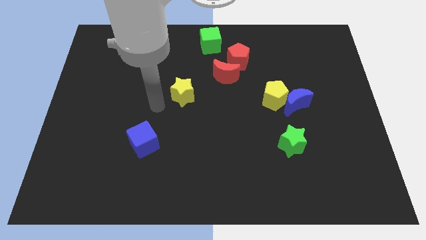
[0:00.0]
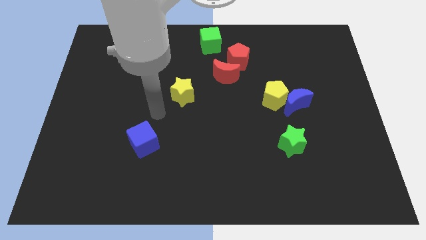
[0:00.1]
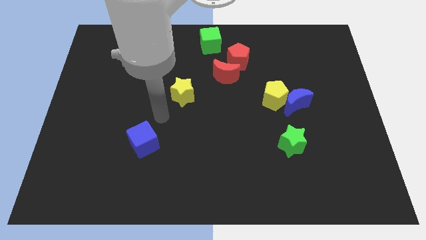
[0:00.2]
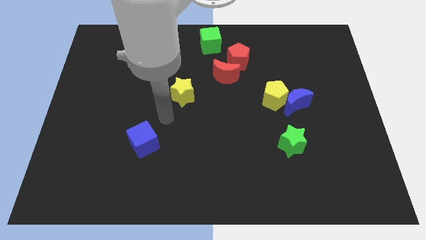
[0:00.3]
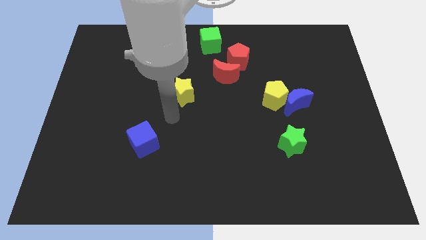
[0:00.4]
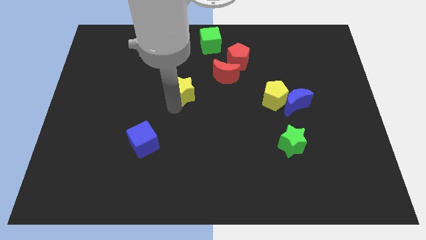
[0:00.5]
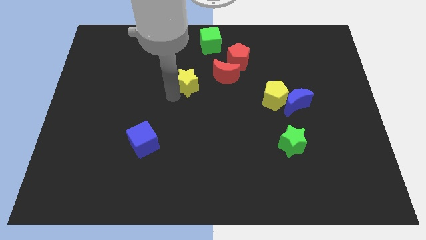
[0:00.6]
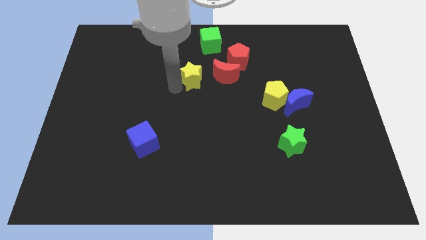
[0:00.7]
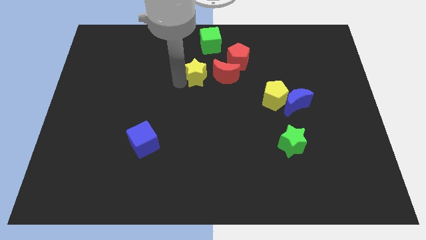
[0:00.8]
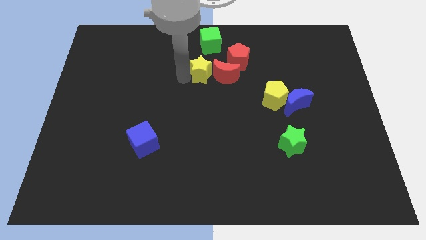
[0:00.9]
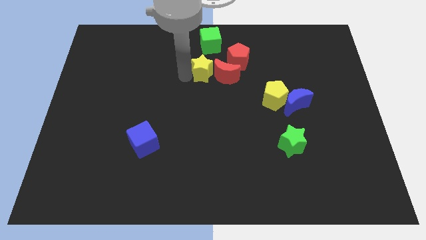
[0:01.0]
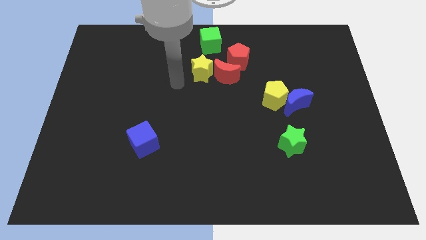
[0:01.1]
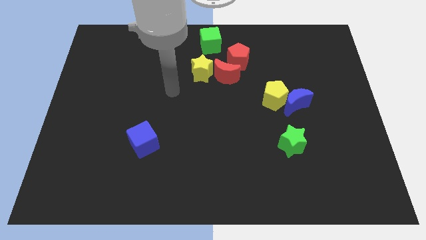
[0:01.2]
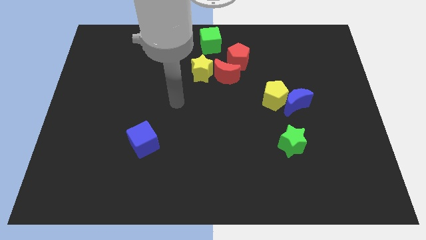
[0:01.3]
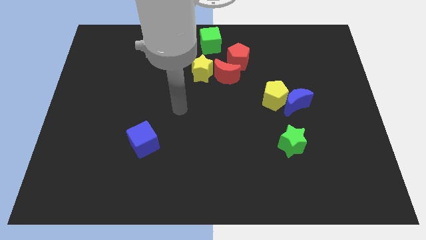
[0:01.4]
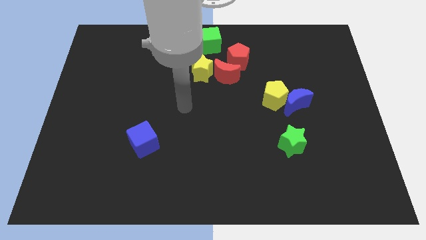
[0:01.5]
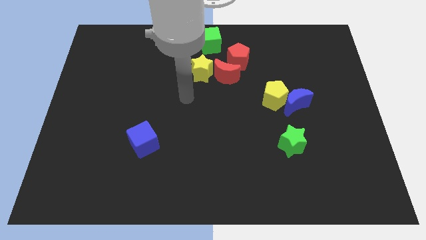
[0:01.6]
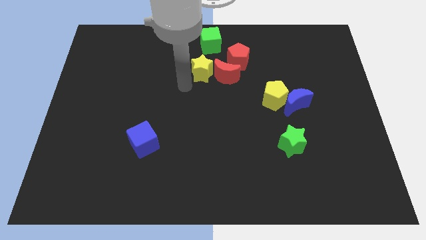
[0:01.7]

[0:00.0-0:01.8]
push the yellow star to the left of the red moon

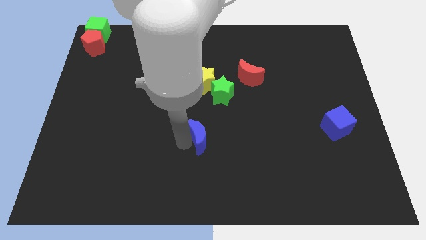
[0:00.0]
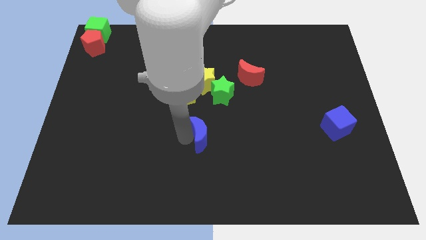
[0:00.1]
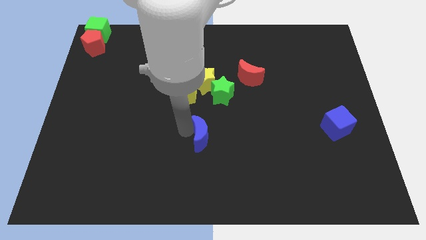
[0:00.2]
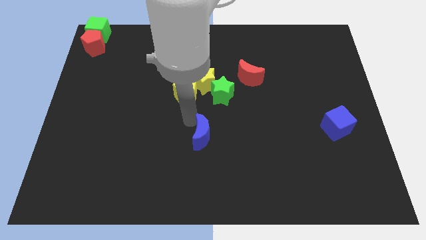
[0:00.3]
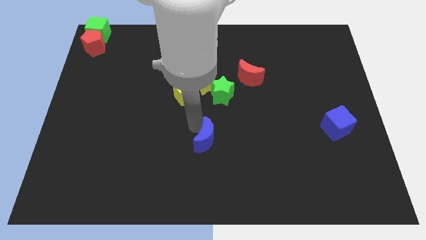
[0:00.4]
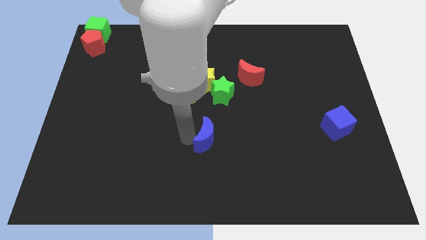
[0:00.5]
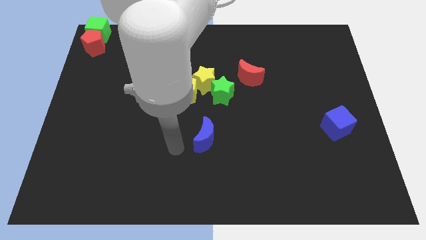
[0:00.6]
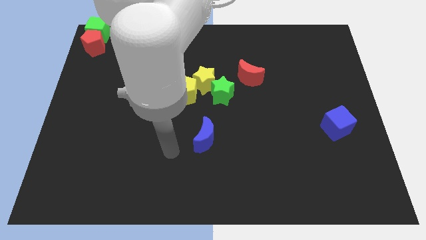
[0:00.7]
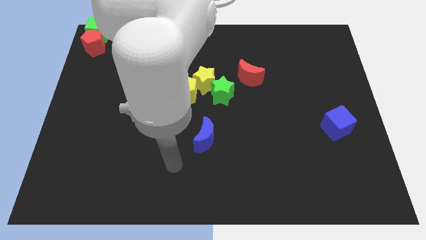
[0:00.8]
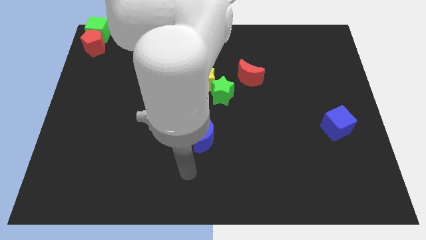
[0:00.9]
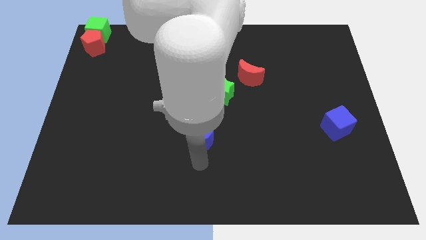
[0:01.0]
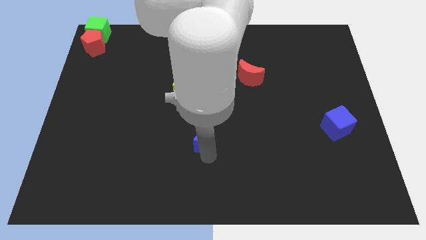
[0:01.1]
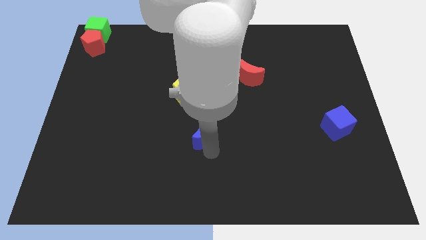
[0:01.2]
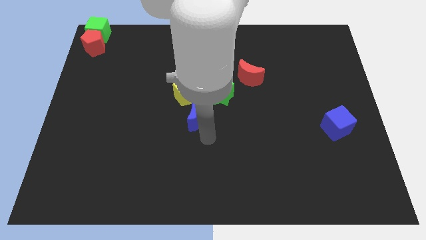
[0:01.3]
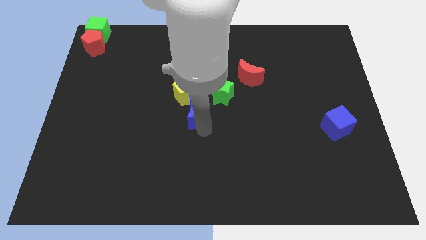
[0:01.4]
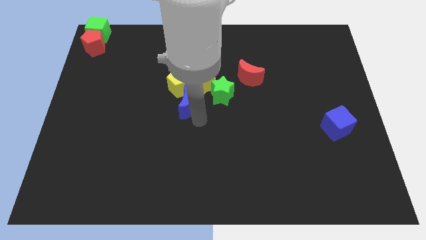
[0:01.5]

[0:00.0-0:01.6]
move the blue moon towards the yellow pentagon

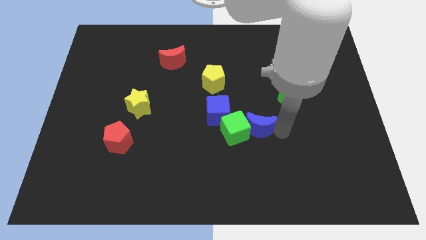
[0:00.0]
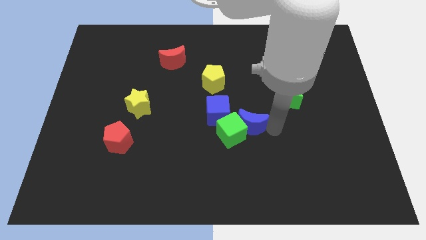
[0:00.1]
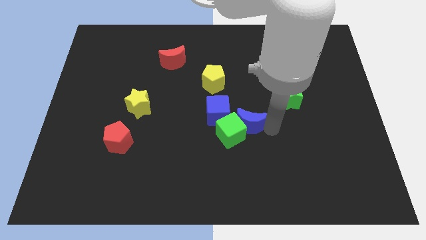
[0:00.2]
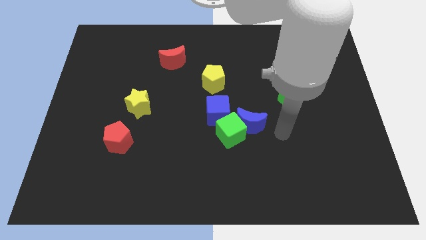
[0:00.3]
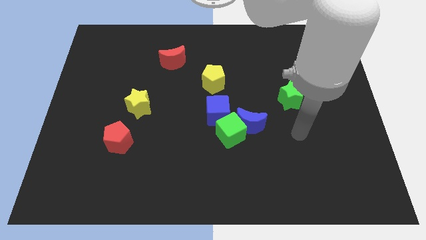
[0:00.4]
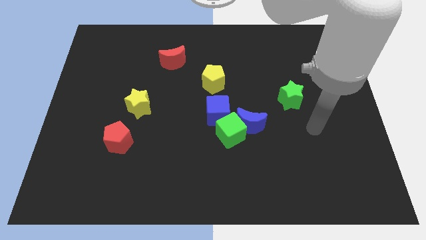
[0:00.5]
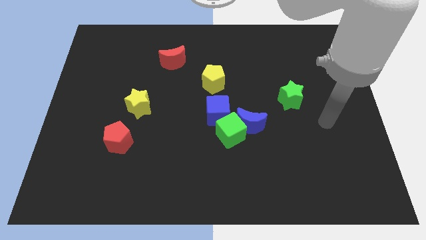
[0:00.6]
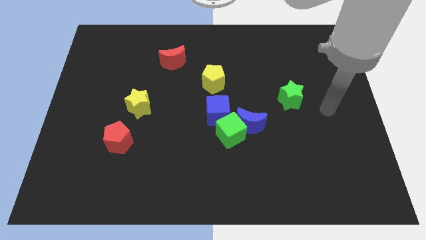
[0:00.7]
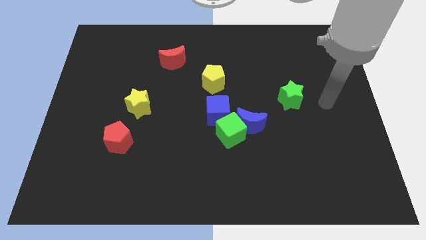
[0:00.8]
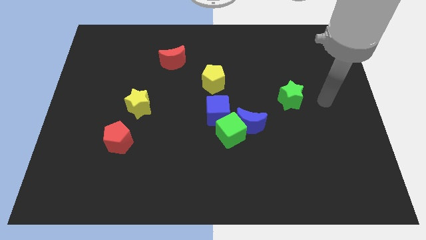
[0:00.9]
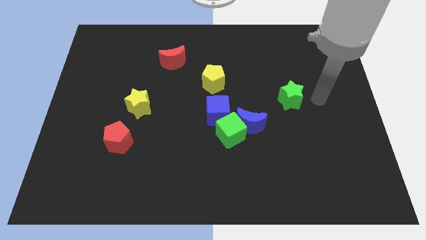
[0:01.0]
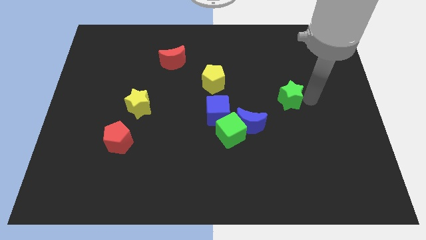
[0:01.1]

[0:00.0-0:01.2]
move your arm away from blue moon

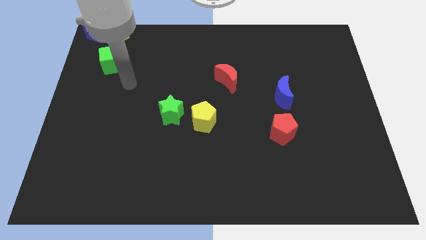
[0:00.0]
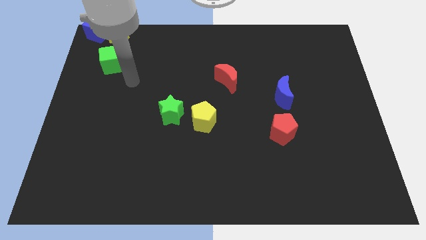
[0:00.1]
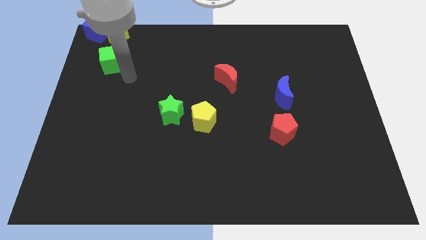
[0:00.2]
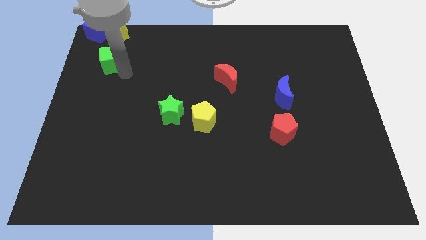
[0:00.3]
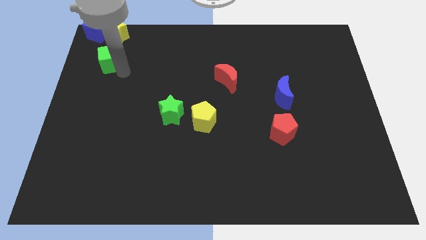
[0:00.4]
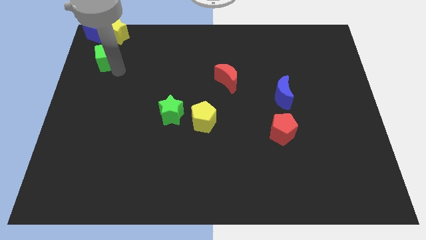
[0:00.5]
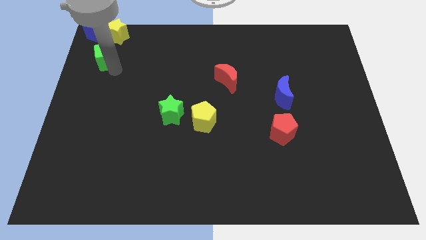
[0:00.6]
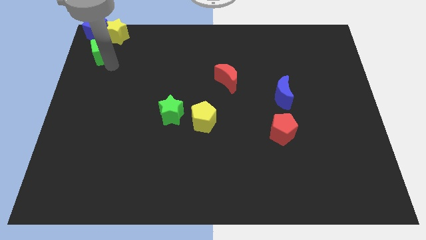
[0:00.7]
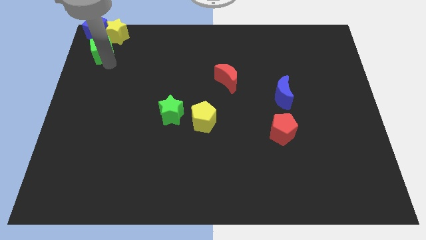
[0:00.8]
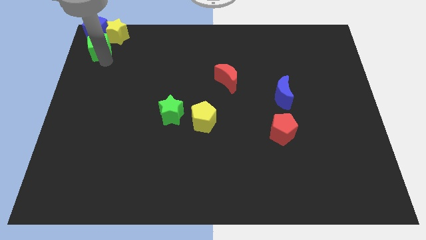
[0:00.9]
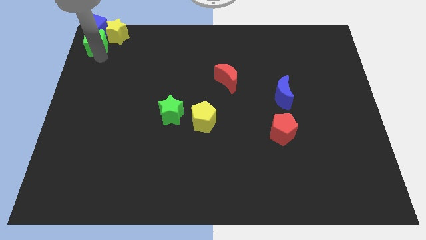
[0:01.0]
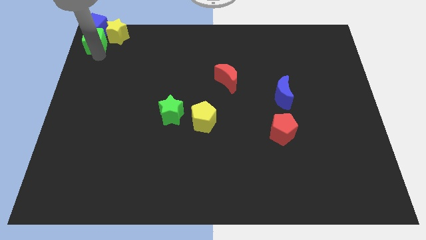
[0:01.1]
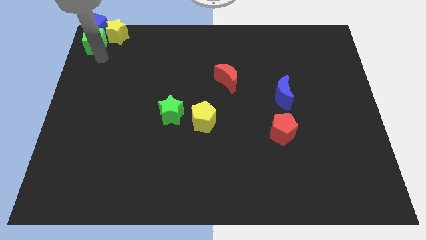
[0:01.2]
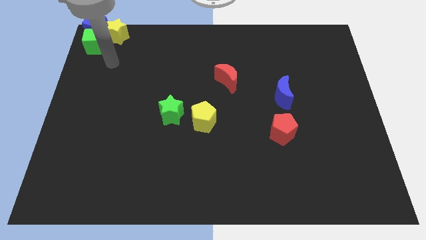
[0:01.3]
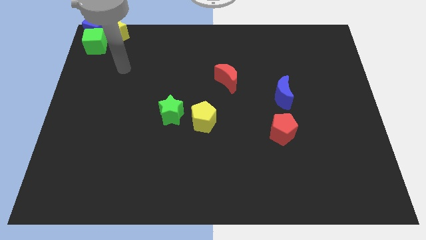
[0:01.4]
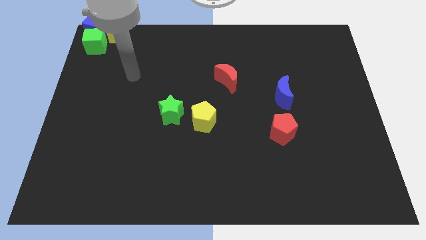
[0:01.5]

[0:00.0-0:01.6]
move the green cube into the blue cube

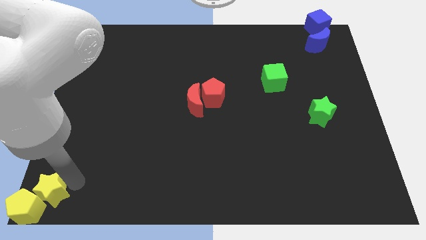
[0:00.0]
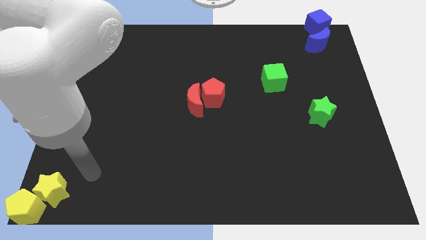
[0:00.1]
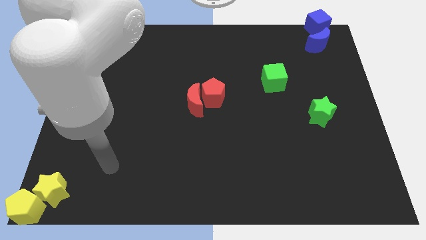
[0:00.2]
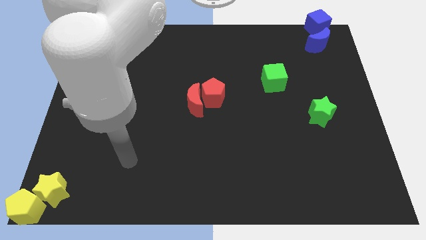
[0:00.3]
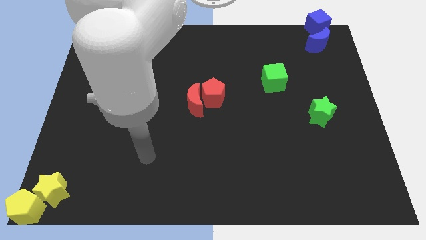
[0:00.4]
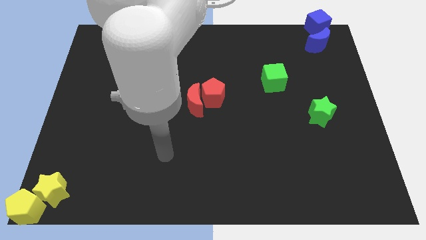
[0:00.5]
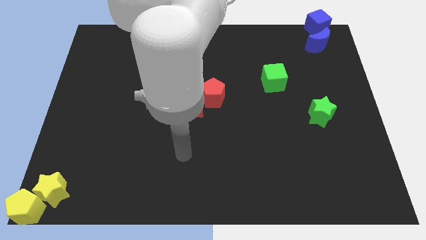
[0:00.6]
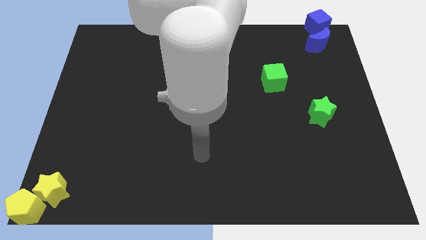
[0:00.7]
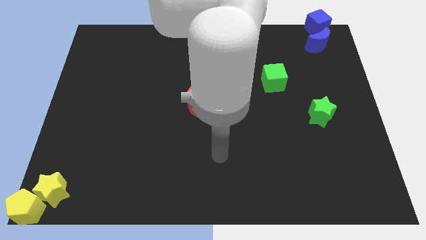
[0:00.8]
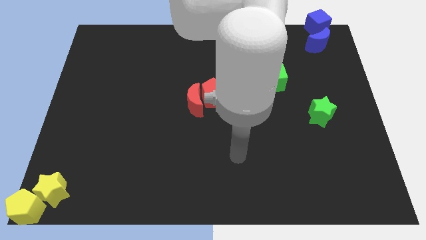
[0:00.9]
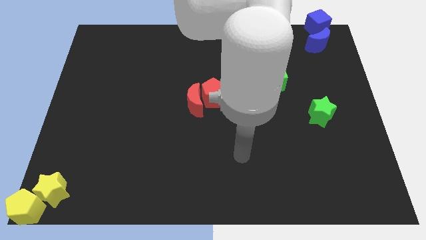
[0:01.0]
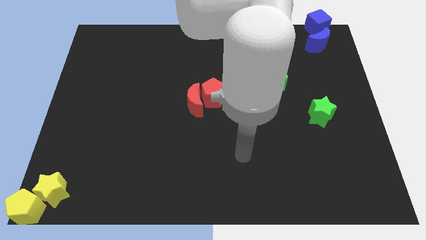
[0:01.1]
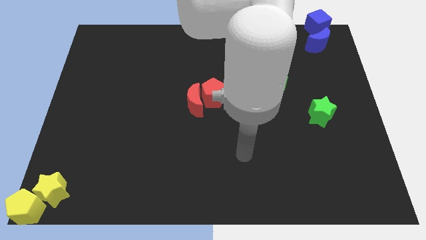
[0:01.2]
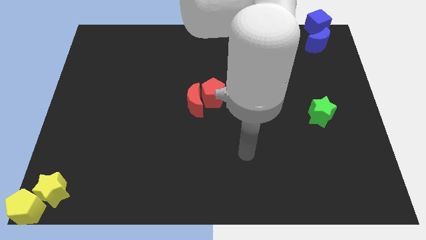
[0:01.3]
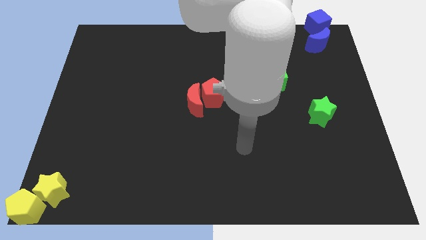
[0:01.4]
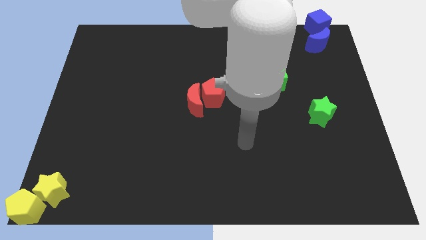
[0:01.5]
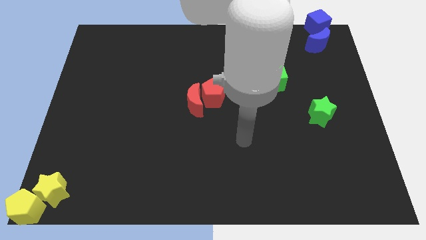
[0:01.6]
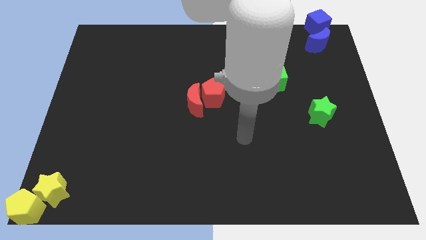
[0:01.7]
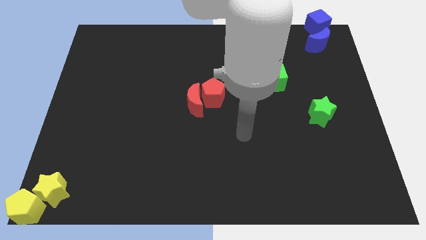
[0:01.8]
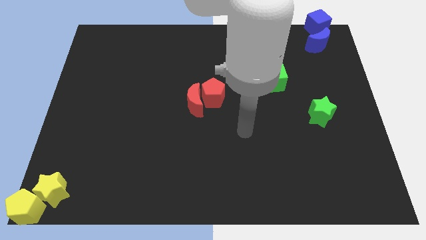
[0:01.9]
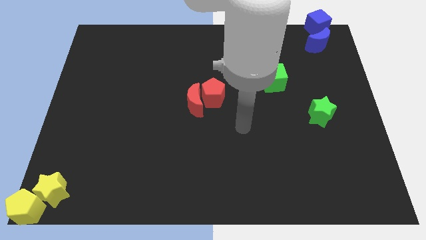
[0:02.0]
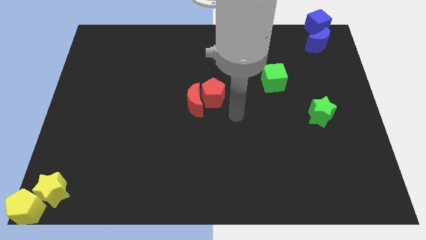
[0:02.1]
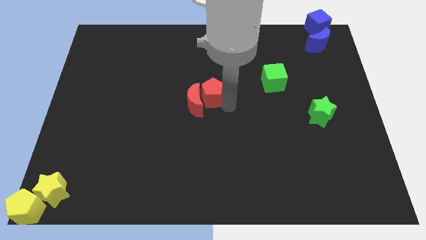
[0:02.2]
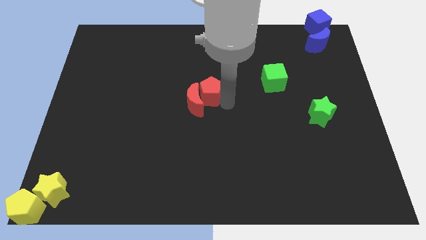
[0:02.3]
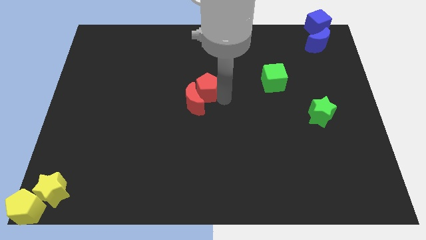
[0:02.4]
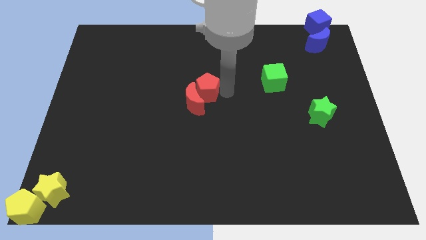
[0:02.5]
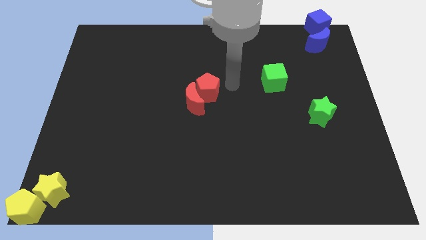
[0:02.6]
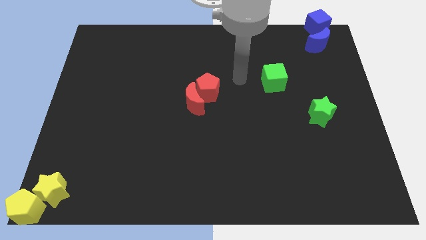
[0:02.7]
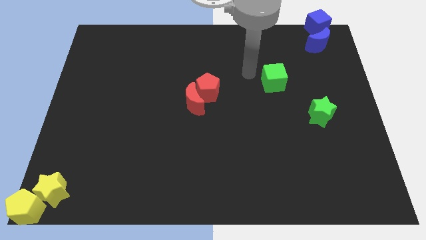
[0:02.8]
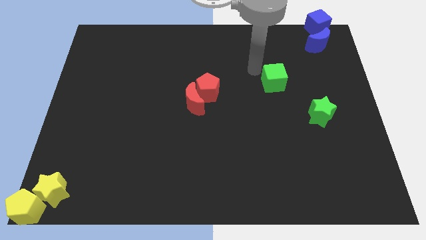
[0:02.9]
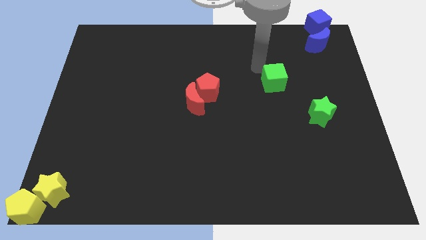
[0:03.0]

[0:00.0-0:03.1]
move your arm on top left of green cube
